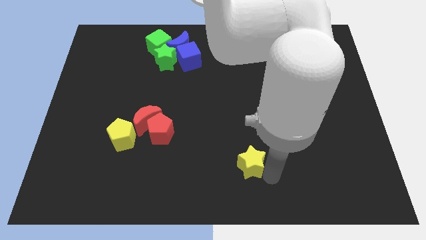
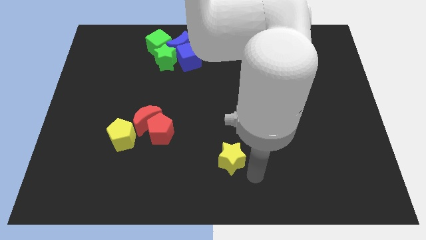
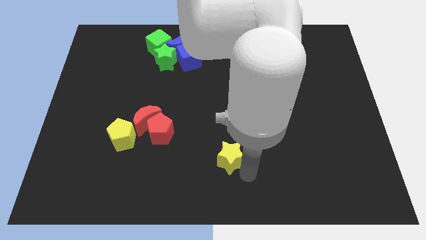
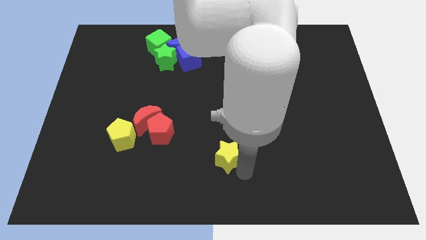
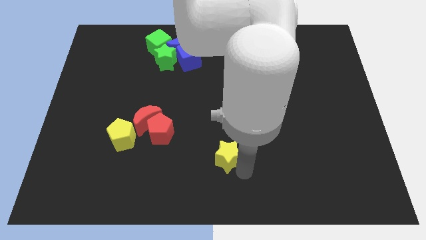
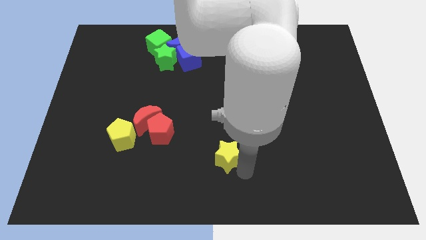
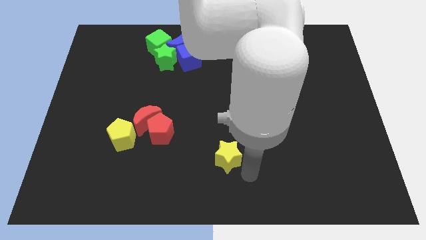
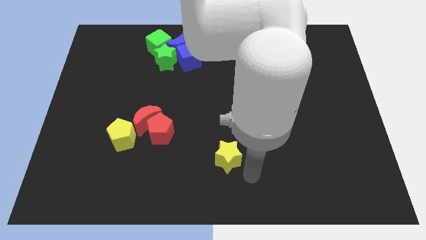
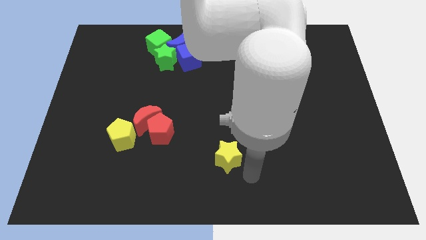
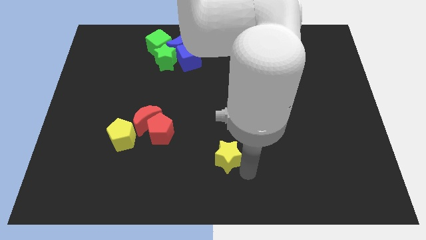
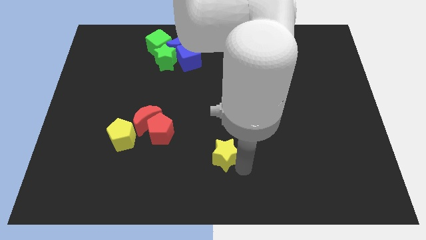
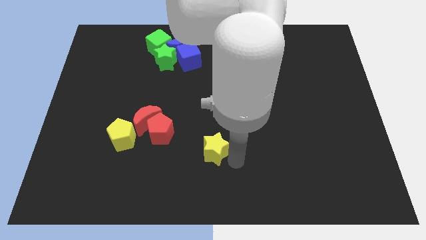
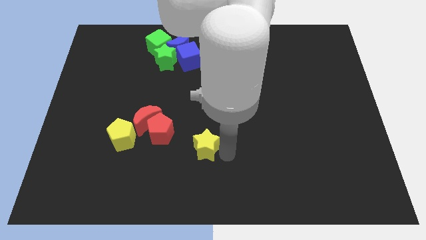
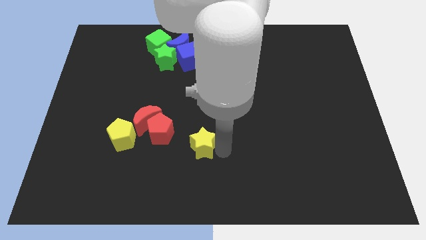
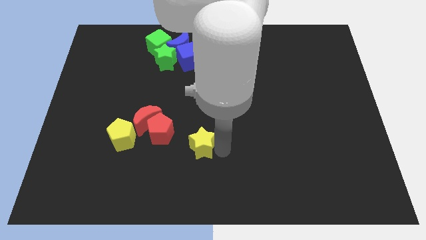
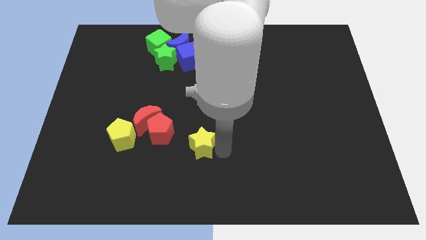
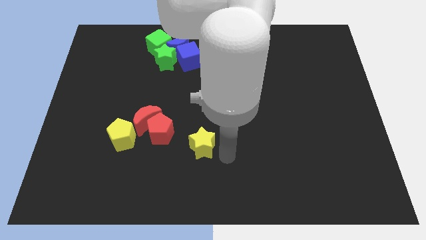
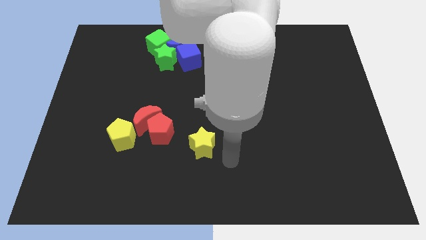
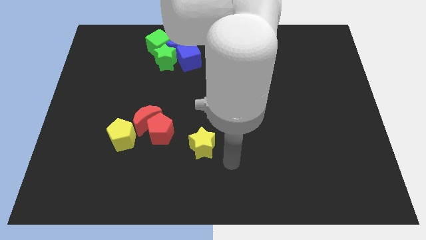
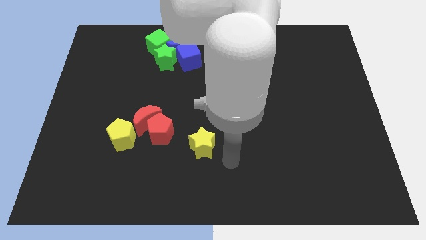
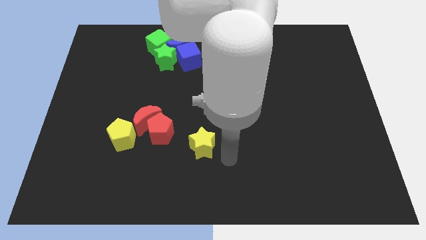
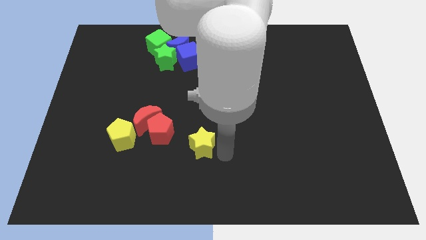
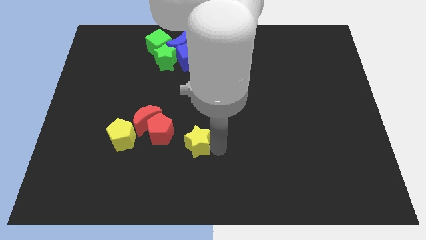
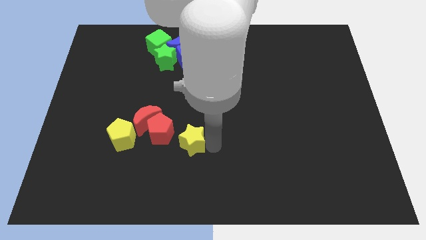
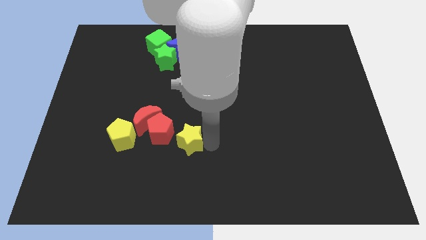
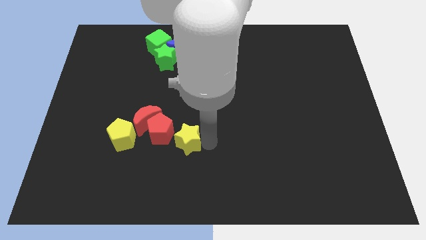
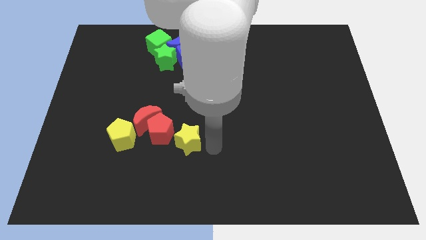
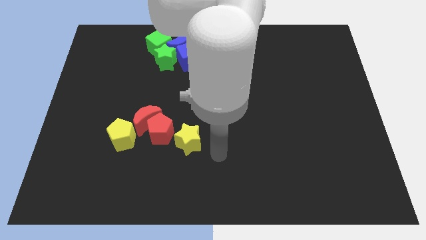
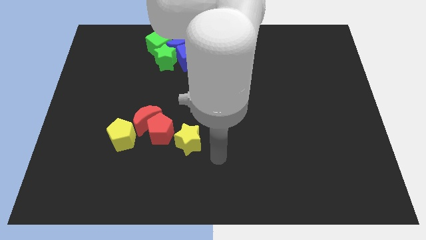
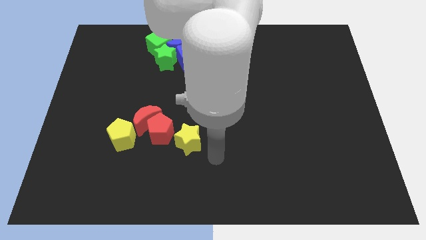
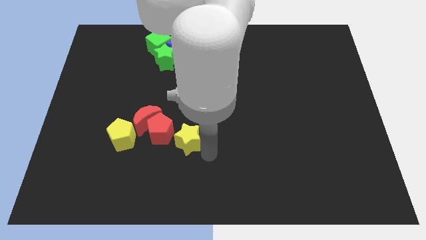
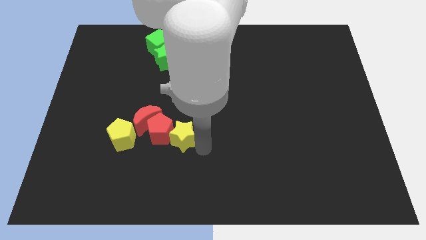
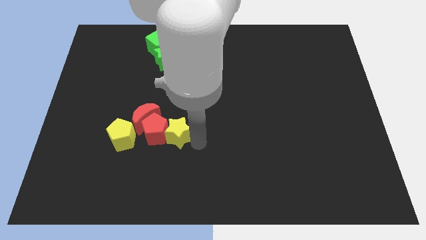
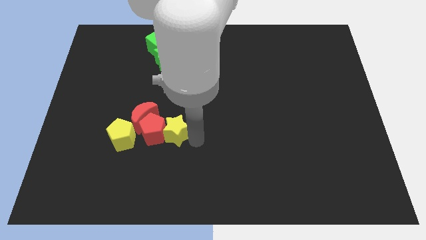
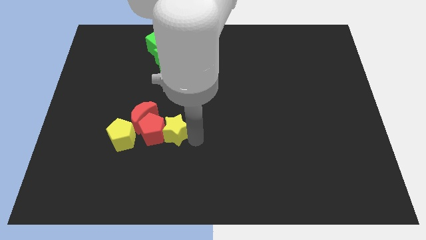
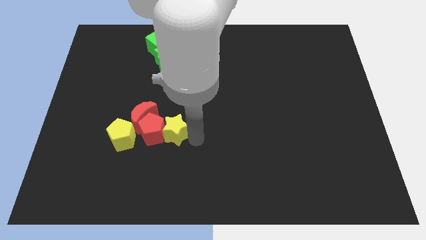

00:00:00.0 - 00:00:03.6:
push the yellow star into red blocks

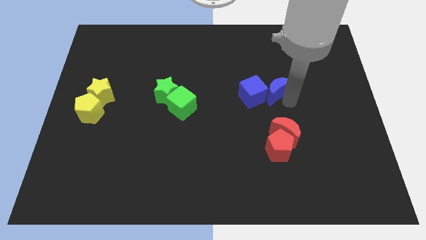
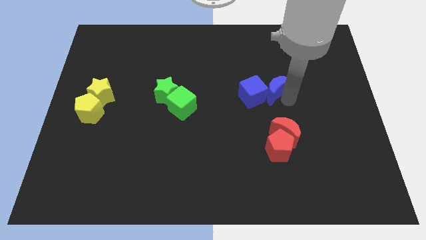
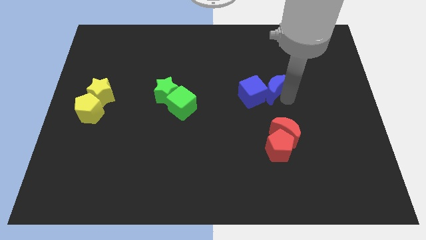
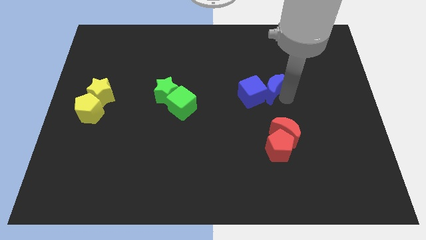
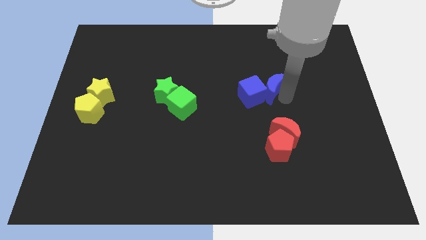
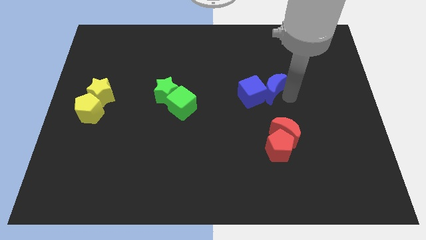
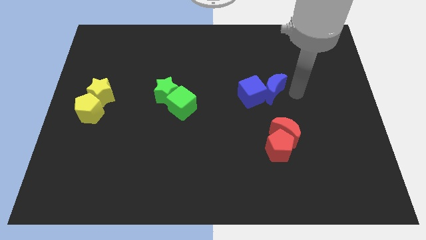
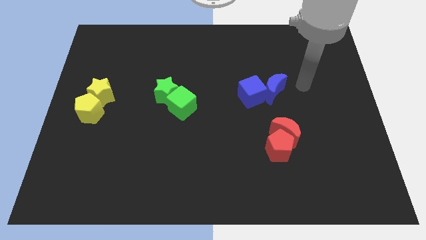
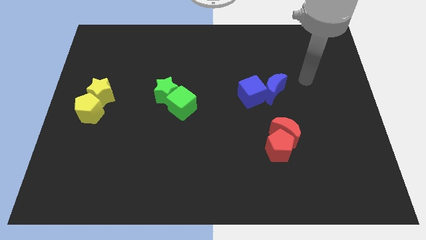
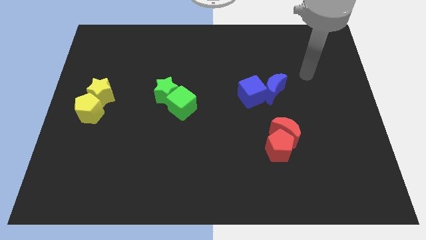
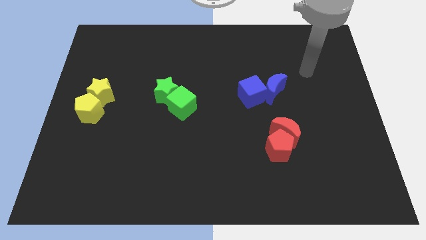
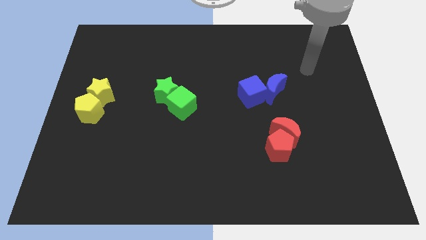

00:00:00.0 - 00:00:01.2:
move arm towards the top right of the board

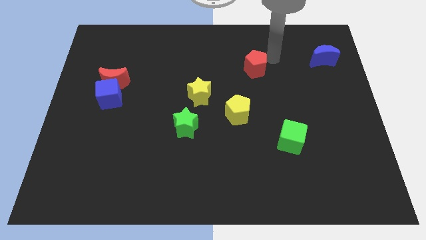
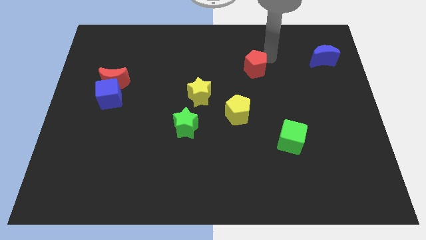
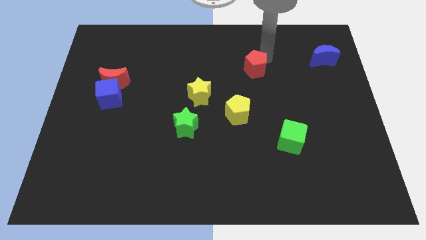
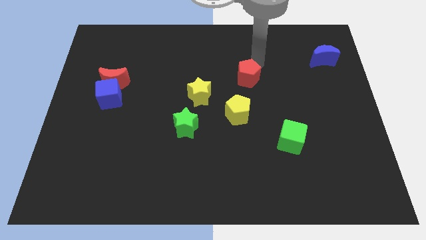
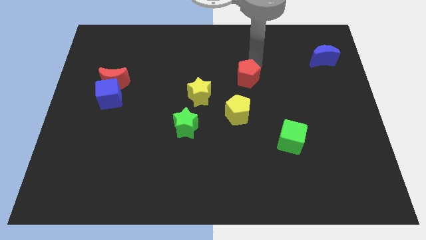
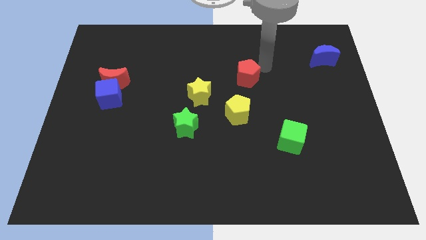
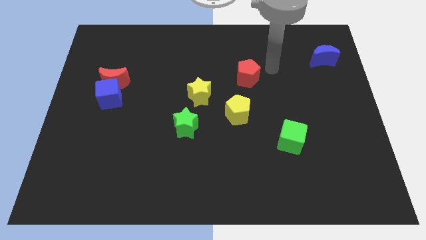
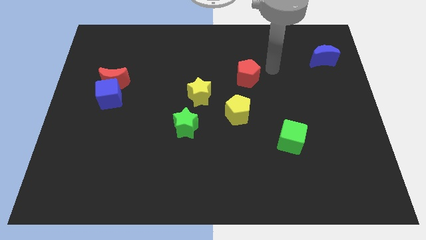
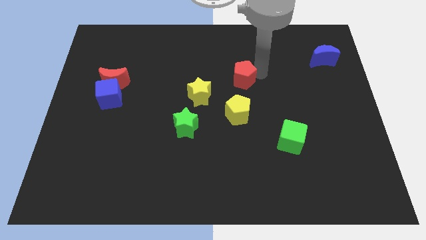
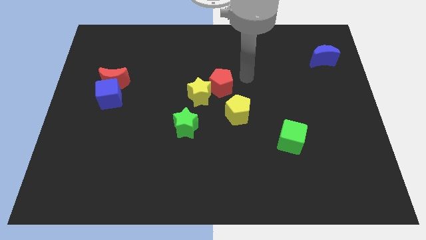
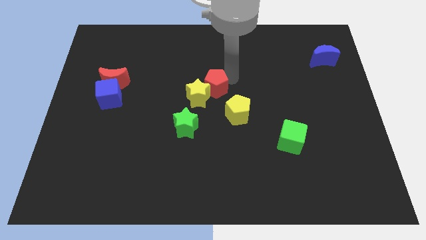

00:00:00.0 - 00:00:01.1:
place the red pentagon above the yellow star

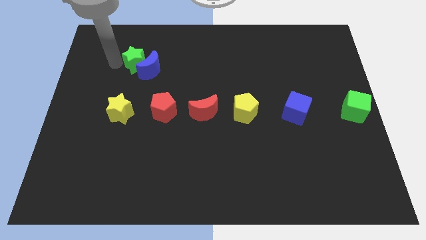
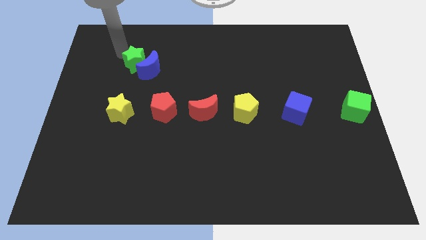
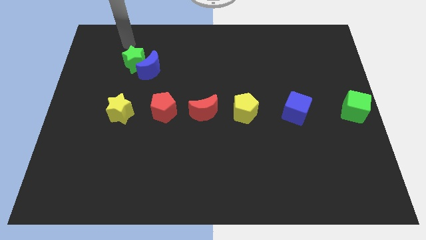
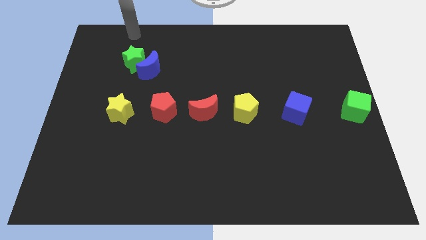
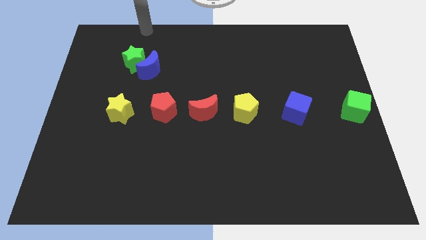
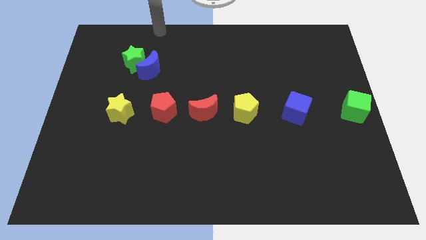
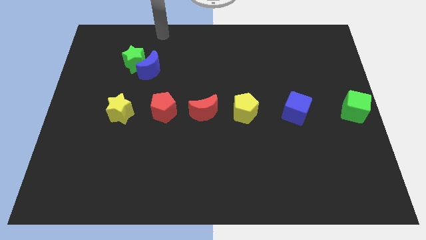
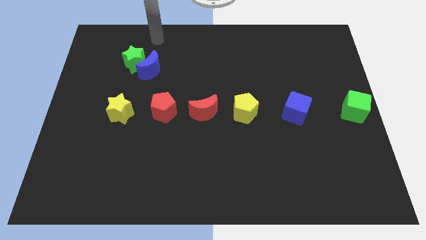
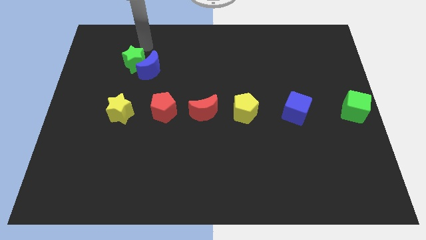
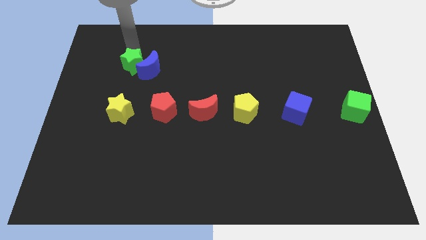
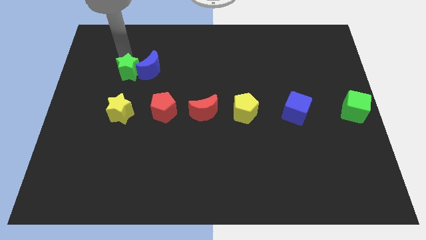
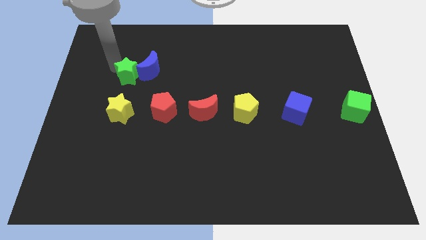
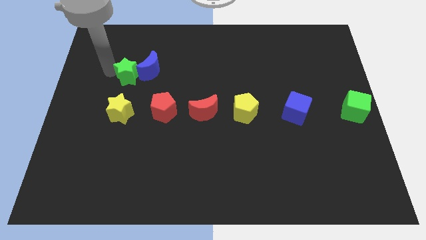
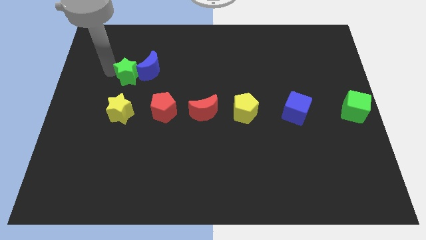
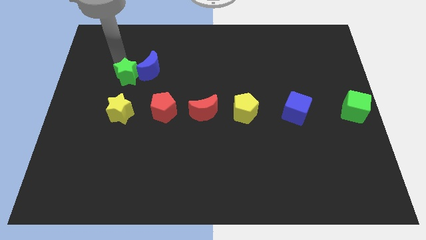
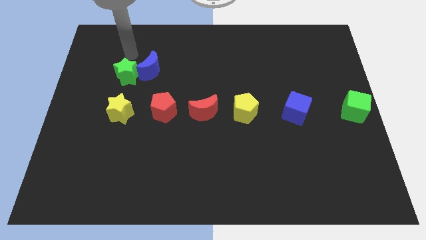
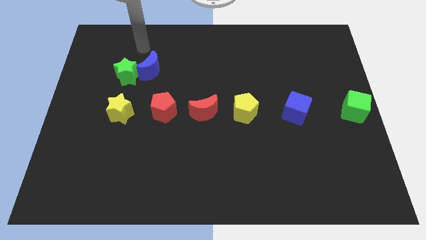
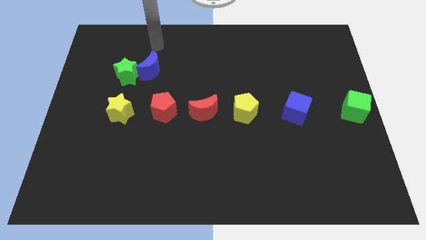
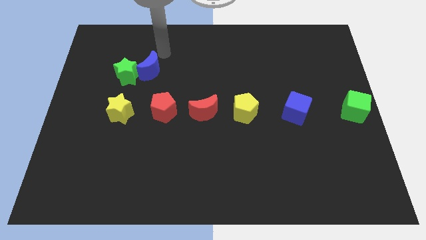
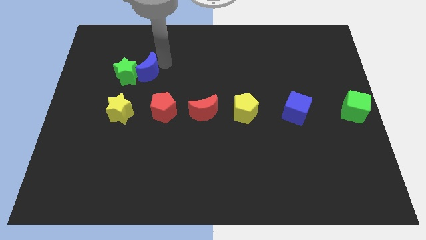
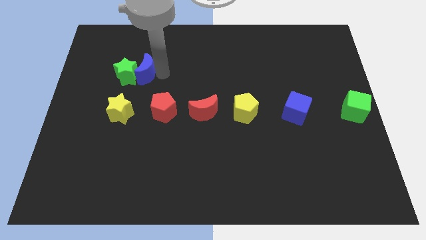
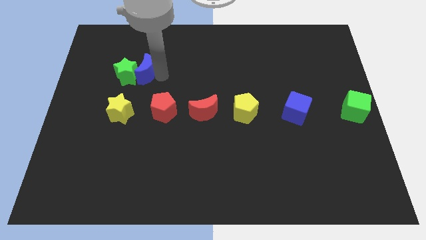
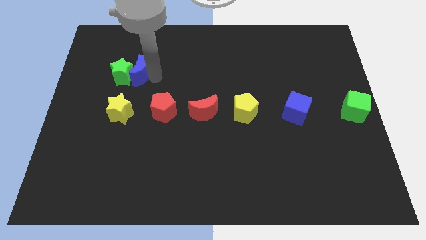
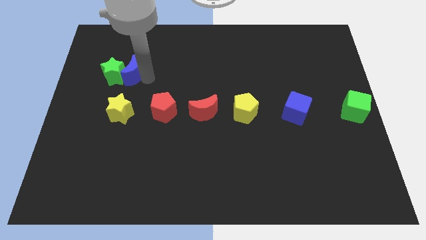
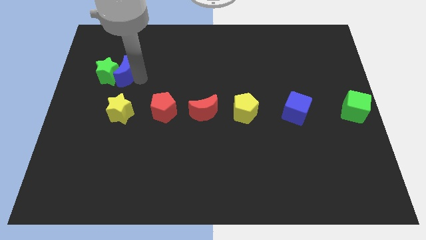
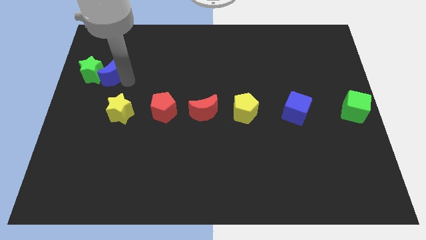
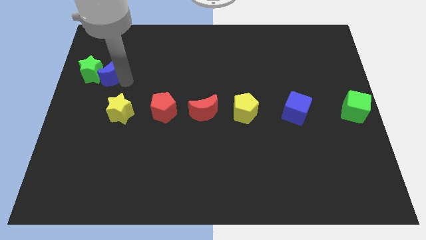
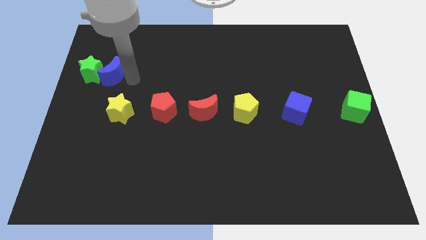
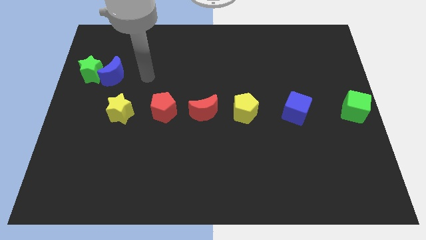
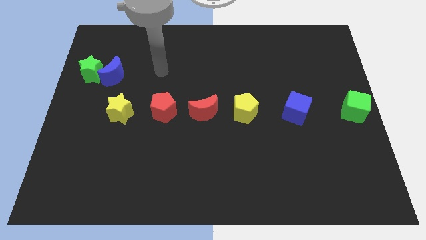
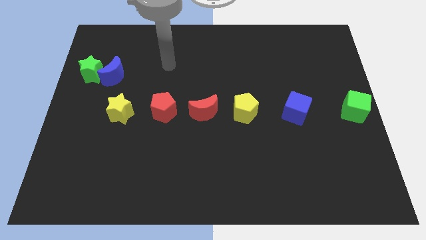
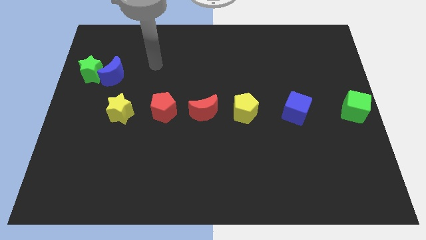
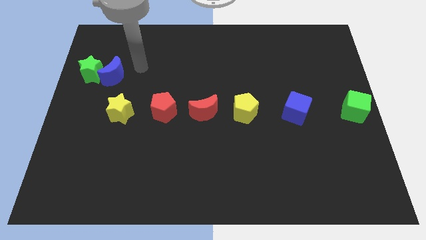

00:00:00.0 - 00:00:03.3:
push the blue crescent into the green star
